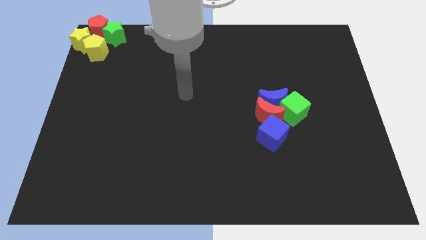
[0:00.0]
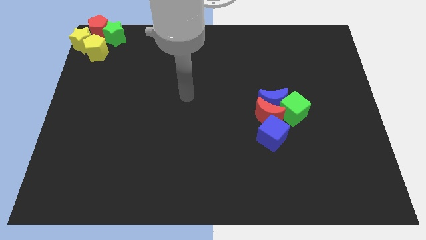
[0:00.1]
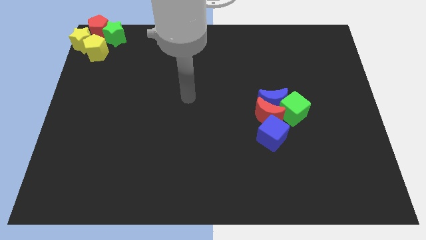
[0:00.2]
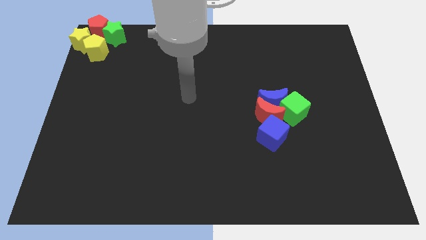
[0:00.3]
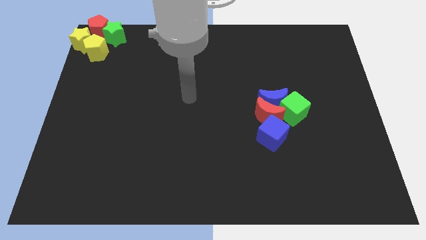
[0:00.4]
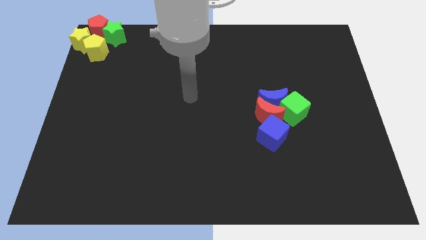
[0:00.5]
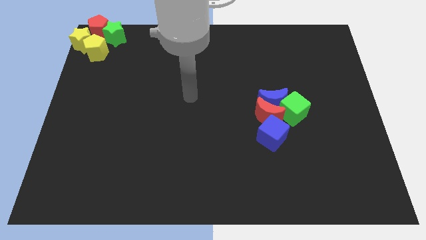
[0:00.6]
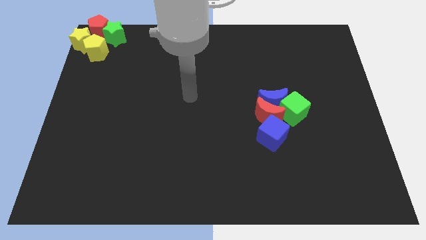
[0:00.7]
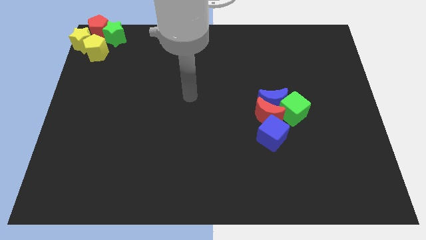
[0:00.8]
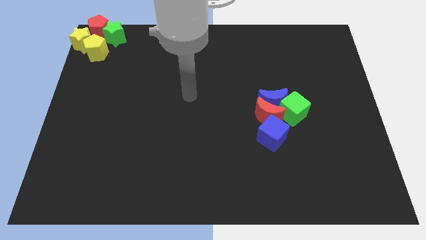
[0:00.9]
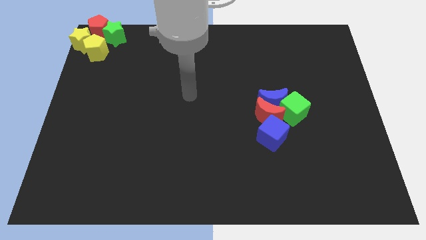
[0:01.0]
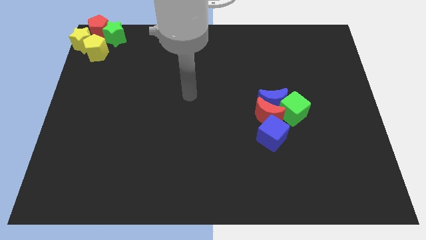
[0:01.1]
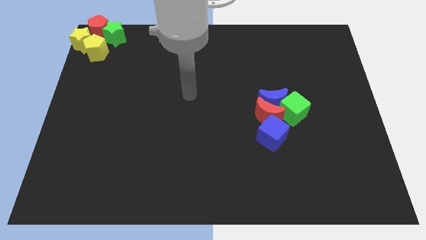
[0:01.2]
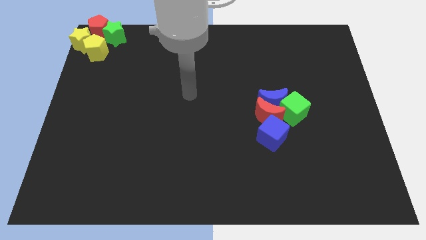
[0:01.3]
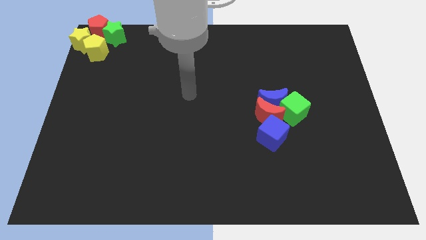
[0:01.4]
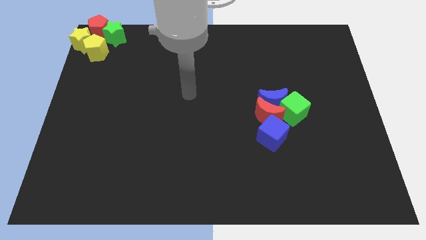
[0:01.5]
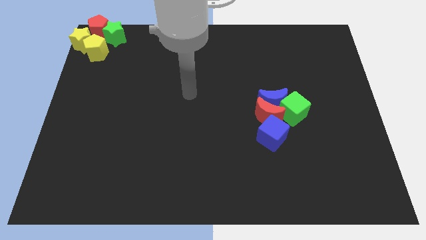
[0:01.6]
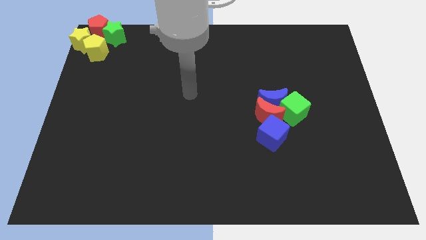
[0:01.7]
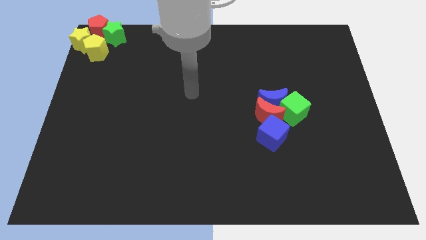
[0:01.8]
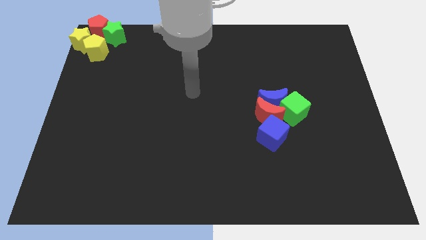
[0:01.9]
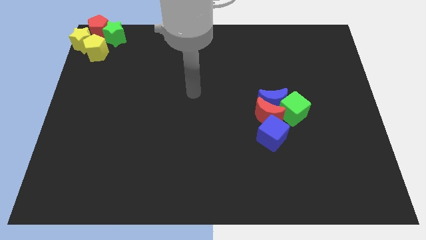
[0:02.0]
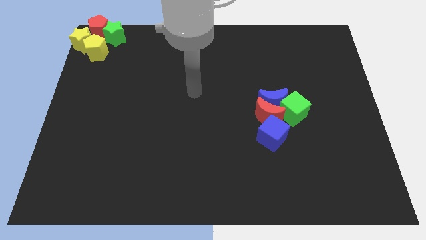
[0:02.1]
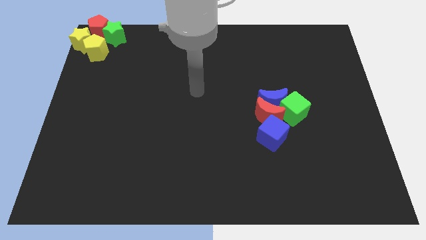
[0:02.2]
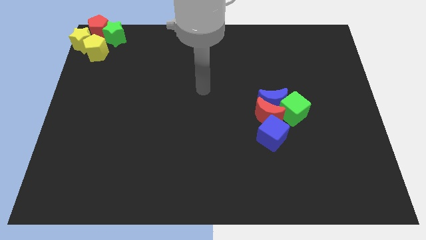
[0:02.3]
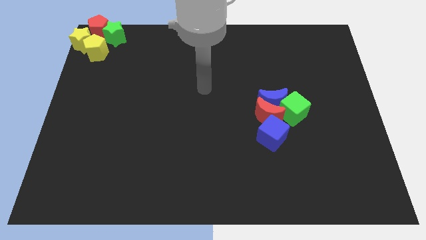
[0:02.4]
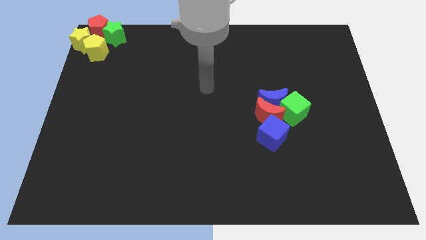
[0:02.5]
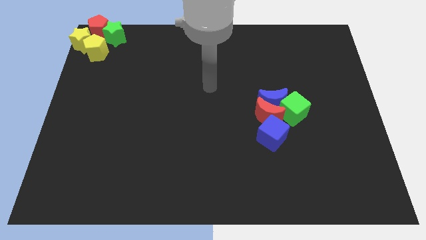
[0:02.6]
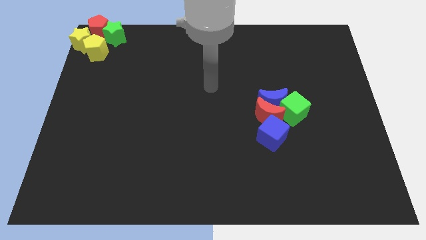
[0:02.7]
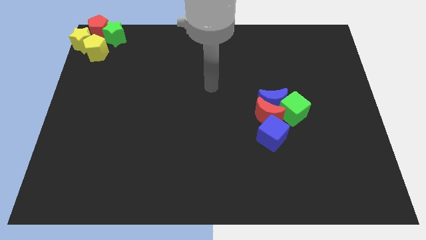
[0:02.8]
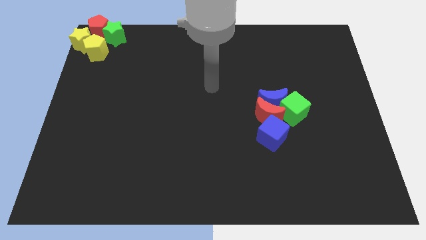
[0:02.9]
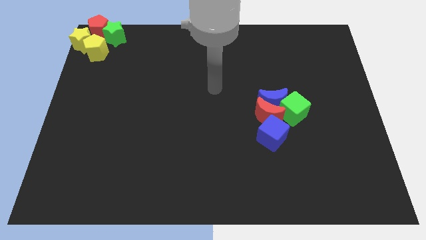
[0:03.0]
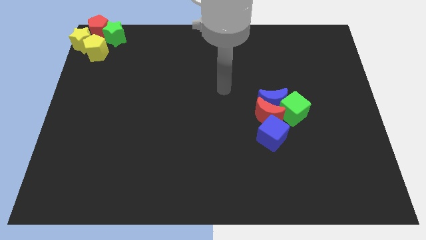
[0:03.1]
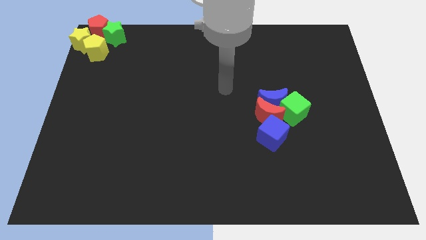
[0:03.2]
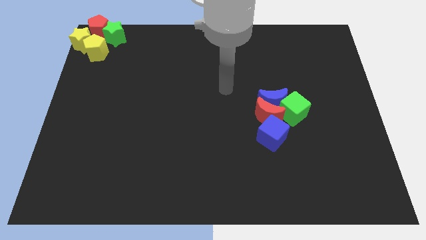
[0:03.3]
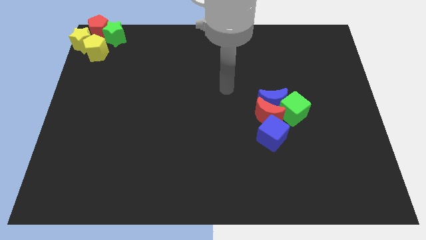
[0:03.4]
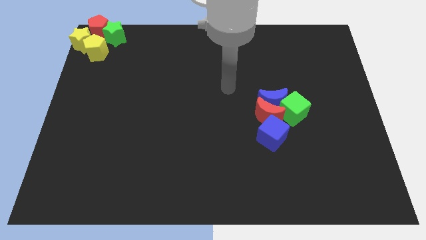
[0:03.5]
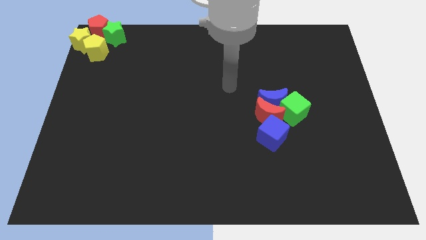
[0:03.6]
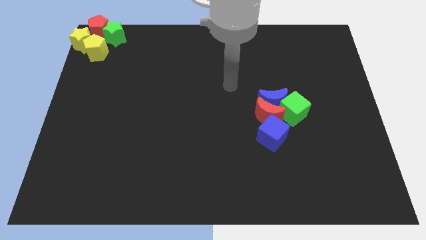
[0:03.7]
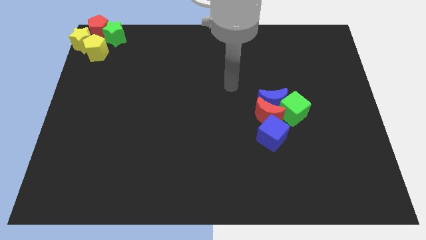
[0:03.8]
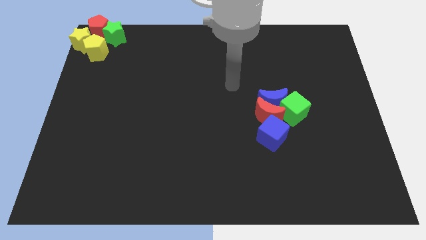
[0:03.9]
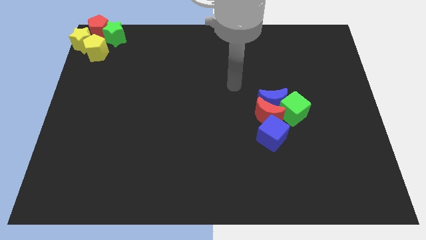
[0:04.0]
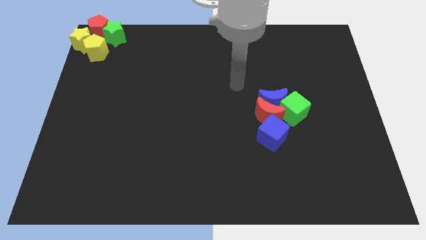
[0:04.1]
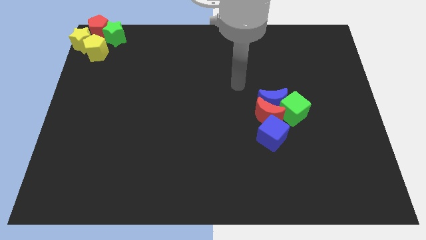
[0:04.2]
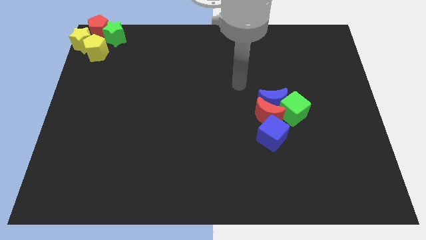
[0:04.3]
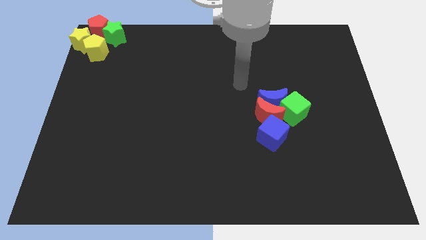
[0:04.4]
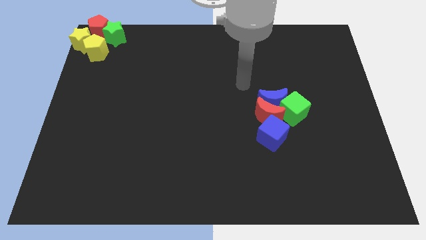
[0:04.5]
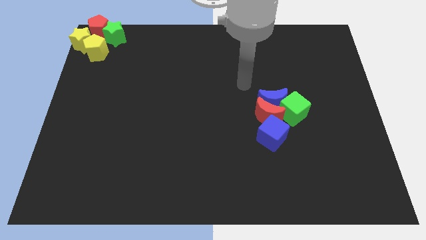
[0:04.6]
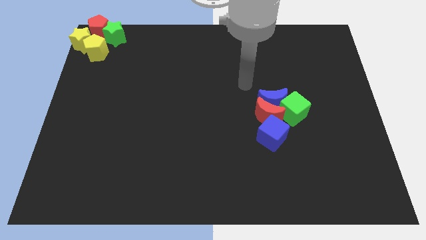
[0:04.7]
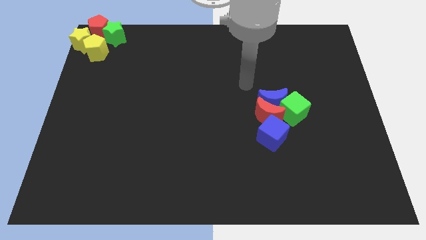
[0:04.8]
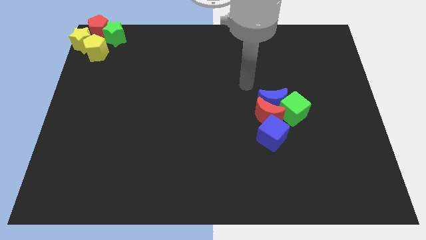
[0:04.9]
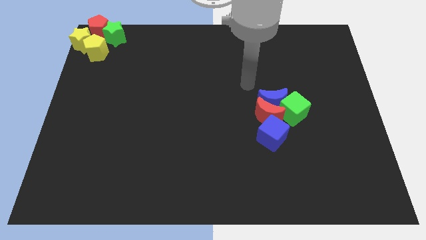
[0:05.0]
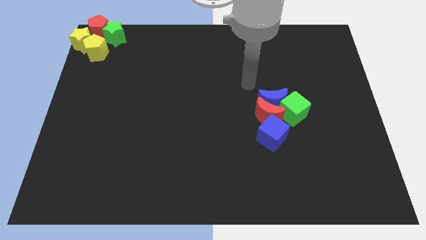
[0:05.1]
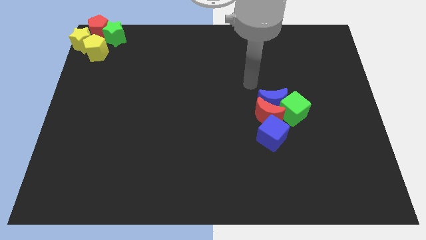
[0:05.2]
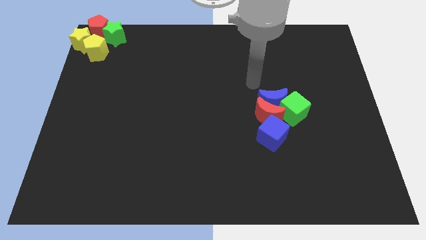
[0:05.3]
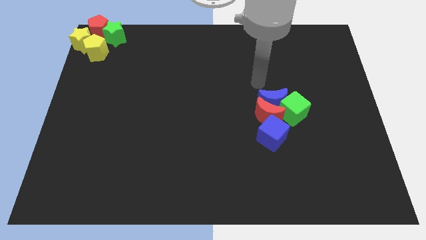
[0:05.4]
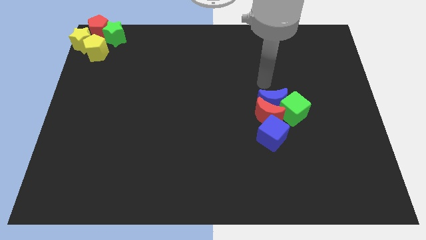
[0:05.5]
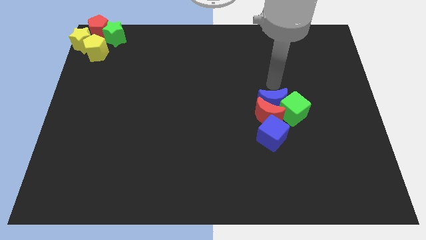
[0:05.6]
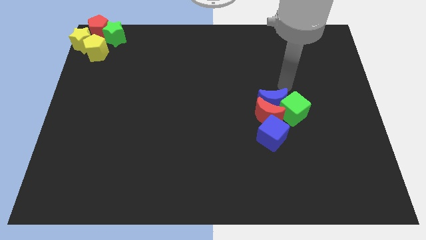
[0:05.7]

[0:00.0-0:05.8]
place your arm above blue crescent

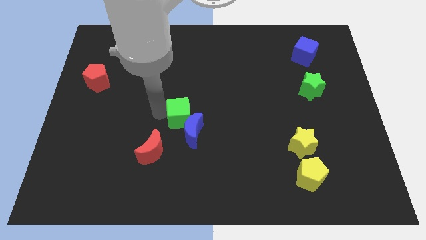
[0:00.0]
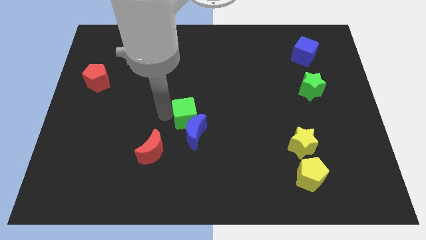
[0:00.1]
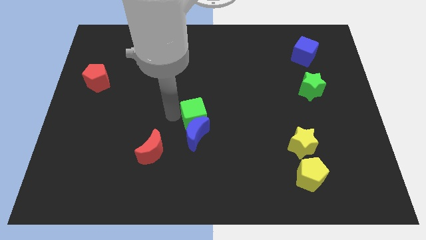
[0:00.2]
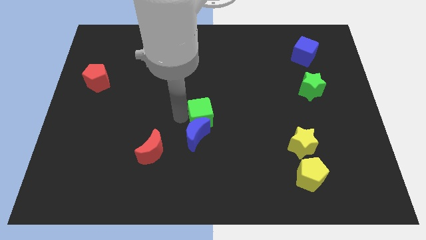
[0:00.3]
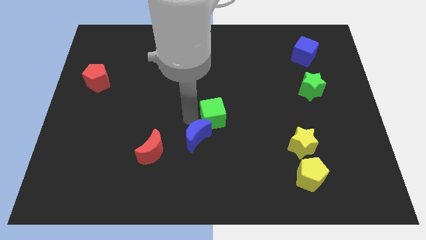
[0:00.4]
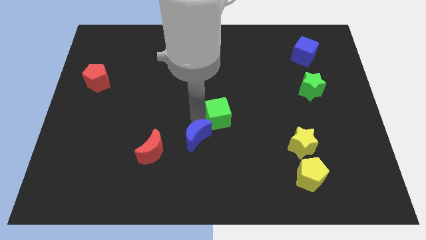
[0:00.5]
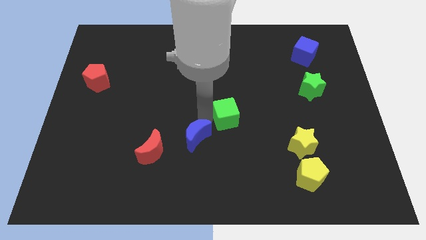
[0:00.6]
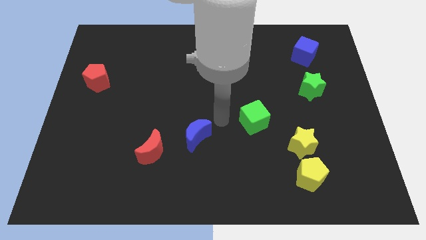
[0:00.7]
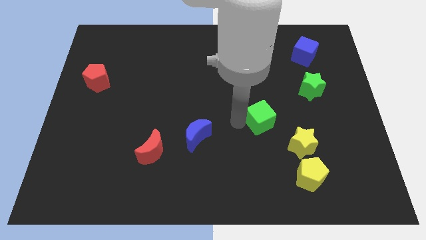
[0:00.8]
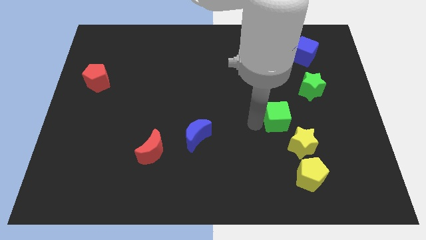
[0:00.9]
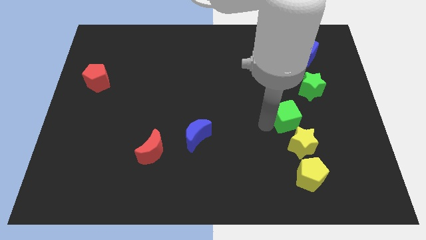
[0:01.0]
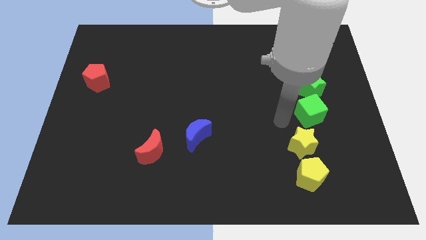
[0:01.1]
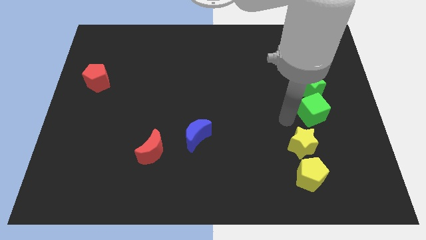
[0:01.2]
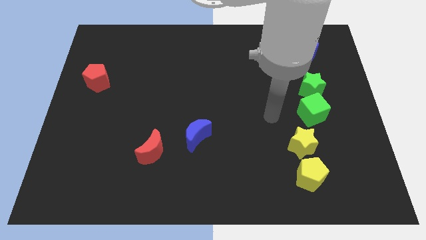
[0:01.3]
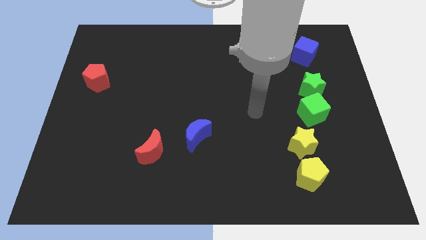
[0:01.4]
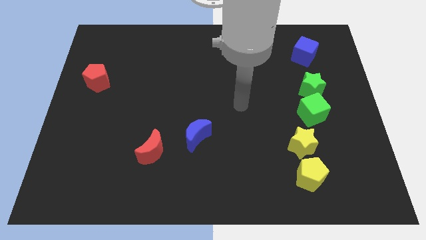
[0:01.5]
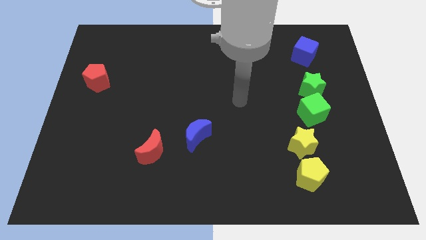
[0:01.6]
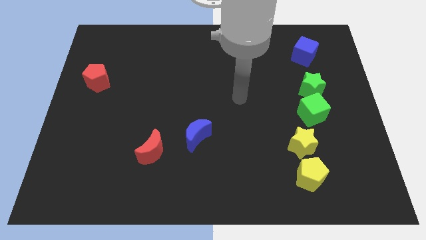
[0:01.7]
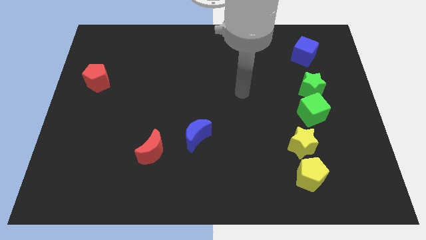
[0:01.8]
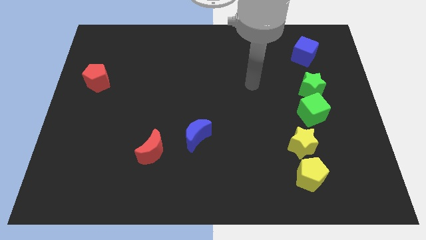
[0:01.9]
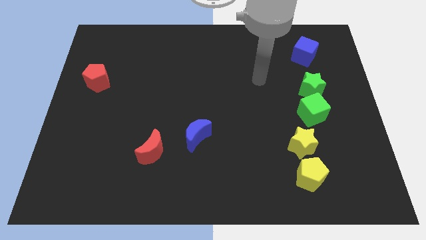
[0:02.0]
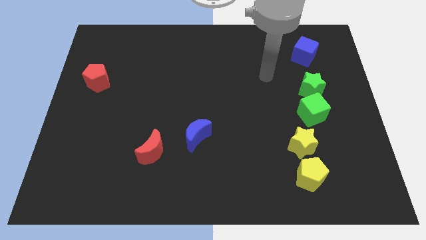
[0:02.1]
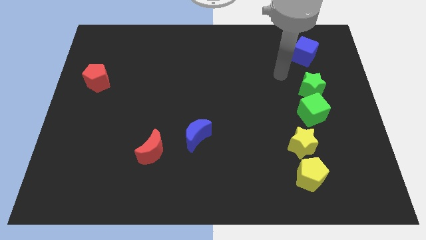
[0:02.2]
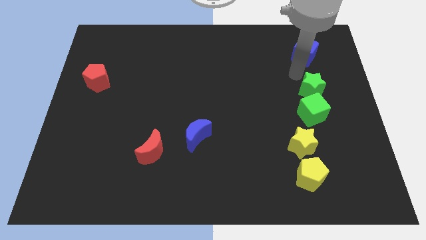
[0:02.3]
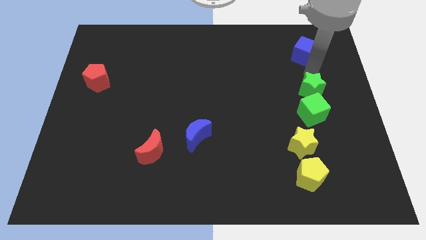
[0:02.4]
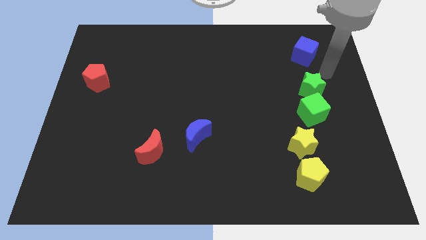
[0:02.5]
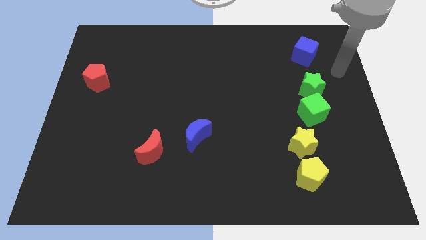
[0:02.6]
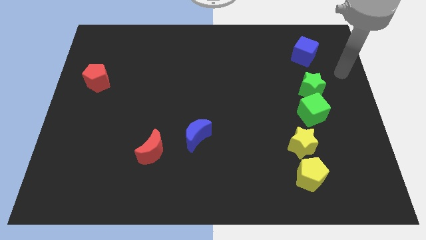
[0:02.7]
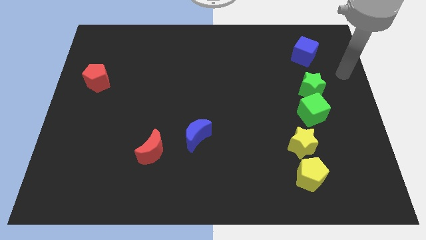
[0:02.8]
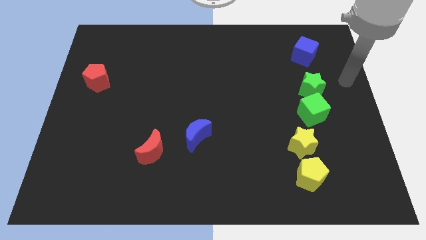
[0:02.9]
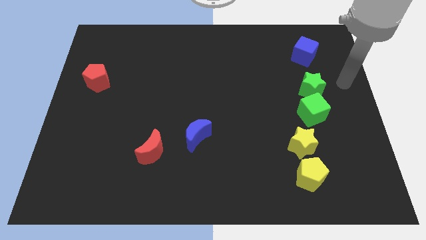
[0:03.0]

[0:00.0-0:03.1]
separate the green cube from the blue moon

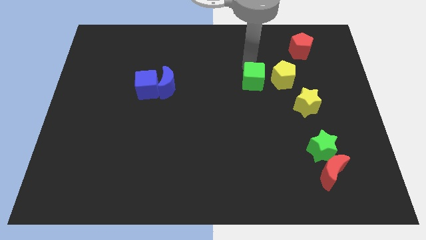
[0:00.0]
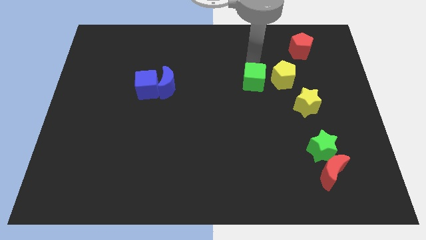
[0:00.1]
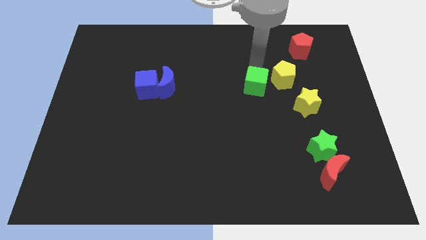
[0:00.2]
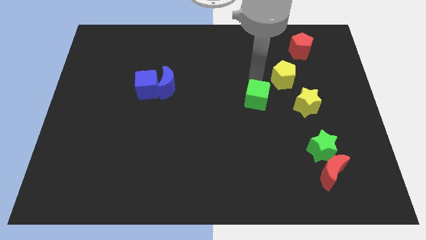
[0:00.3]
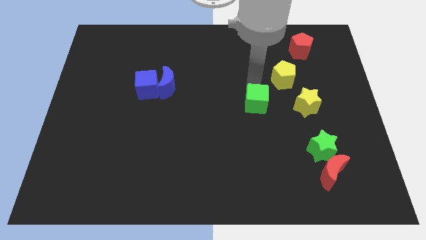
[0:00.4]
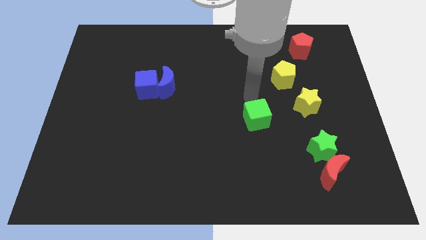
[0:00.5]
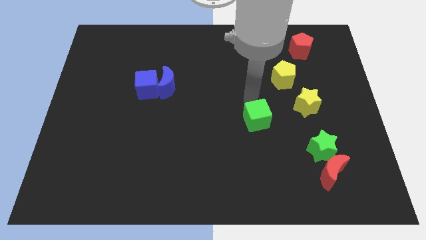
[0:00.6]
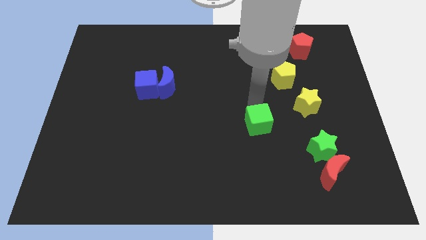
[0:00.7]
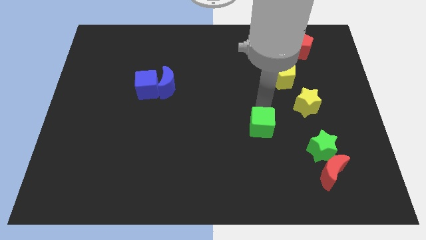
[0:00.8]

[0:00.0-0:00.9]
push the green cube to the bottom side
